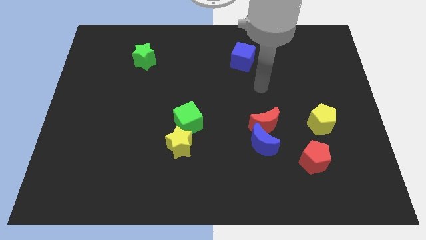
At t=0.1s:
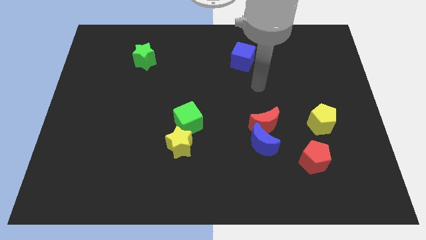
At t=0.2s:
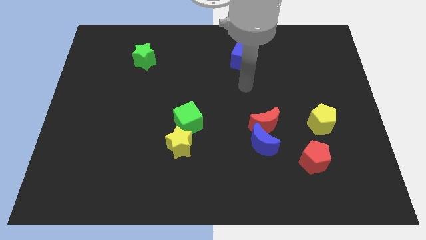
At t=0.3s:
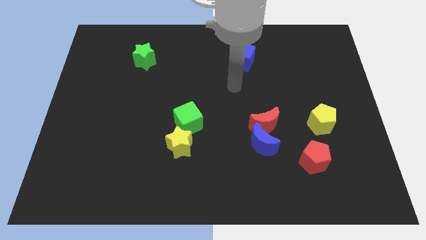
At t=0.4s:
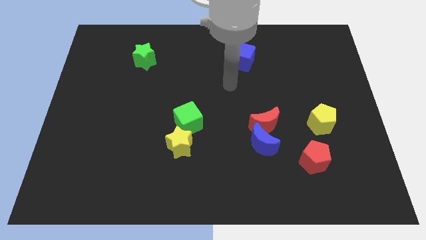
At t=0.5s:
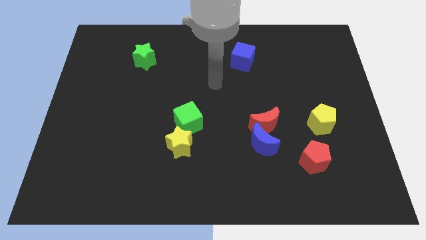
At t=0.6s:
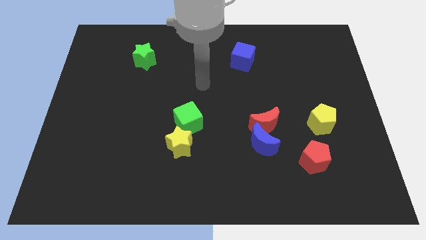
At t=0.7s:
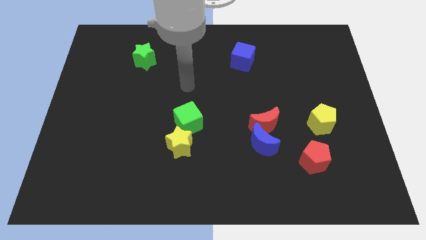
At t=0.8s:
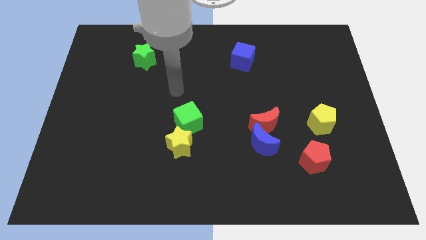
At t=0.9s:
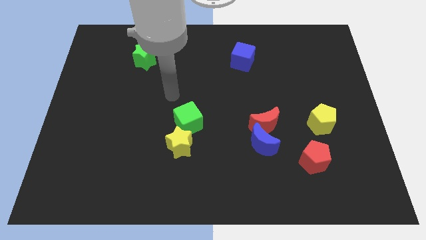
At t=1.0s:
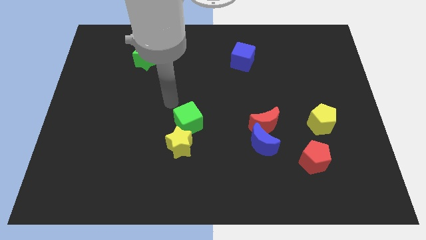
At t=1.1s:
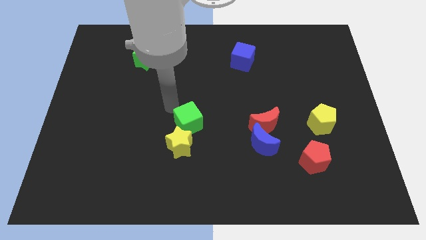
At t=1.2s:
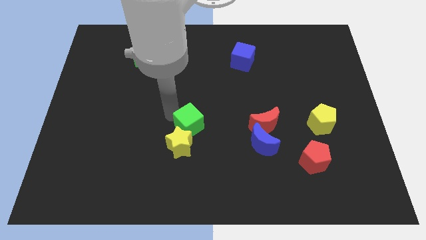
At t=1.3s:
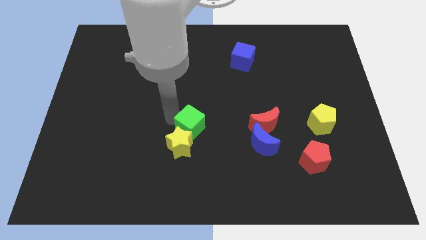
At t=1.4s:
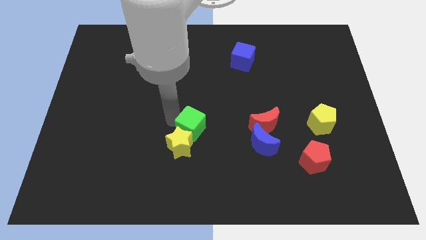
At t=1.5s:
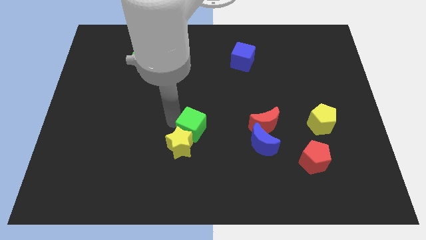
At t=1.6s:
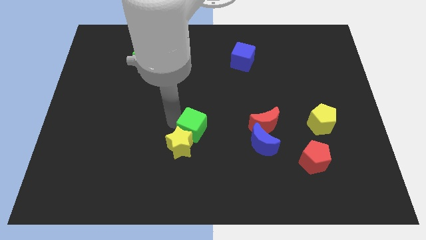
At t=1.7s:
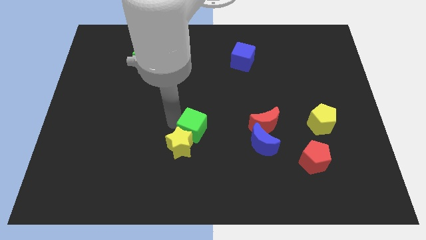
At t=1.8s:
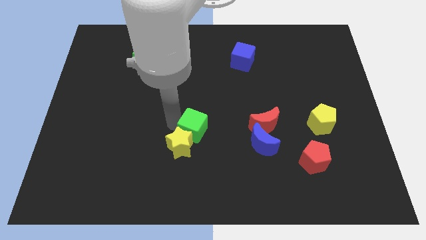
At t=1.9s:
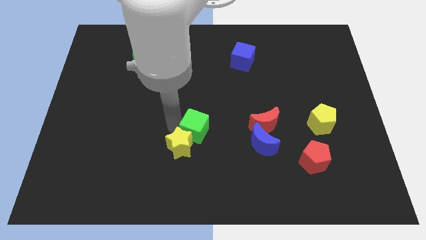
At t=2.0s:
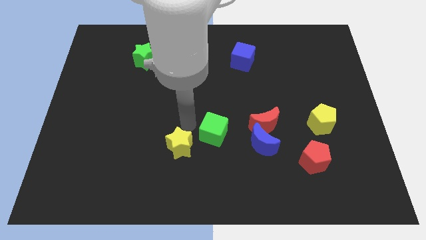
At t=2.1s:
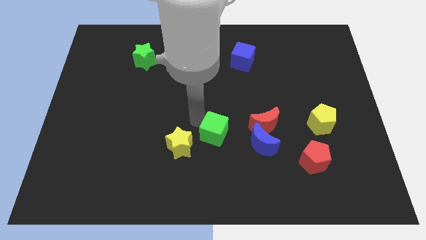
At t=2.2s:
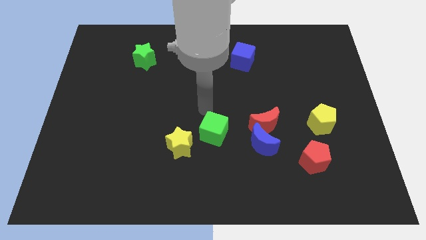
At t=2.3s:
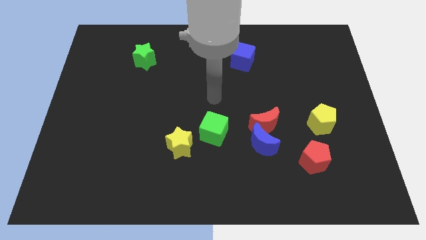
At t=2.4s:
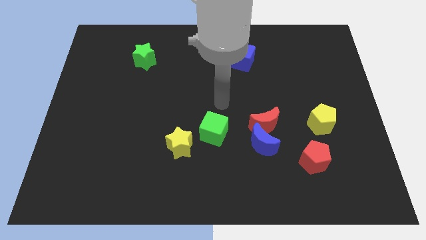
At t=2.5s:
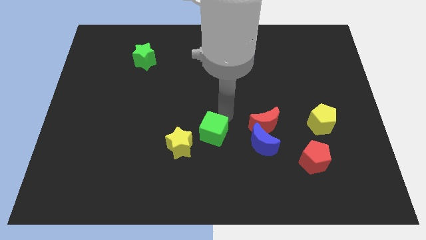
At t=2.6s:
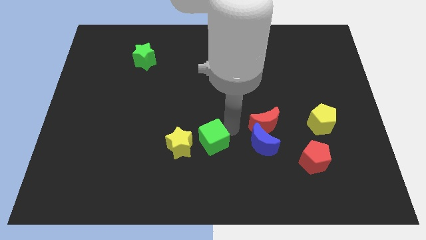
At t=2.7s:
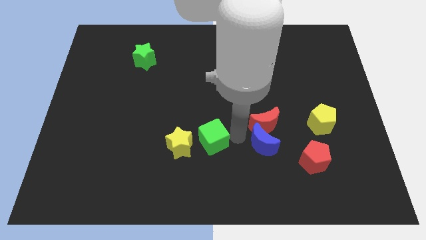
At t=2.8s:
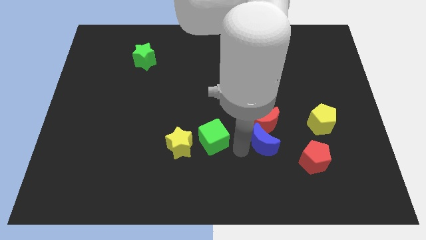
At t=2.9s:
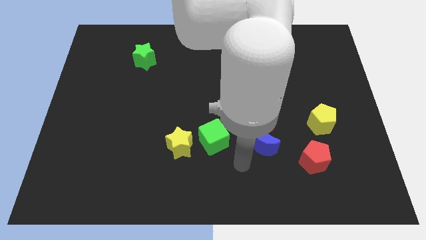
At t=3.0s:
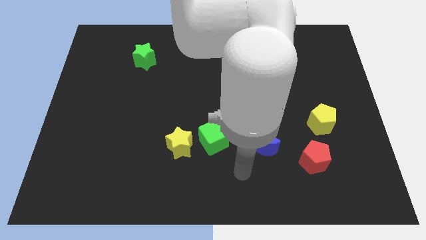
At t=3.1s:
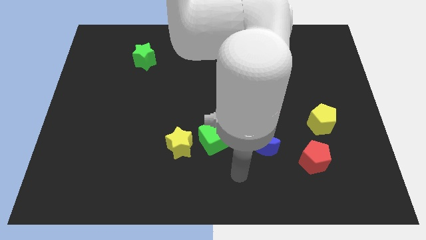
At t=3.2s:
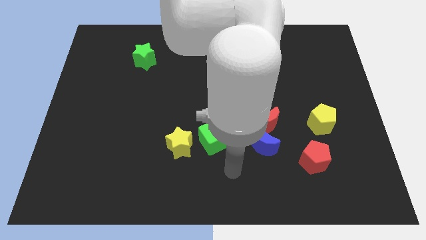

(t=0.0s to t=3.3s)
push the green cube to the right of the yellow star

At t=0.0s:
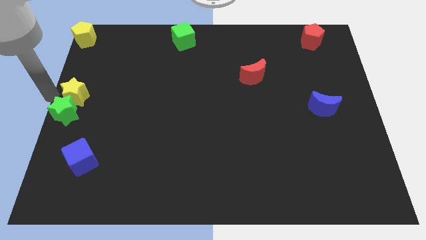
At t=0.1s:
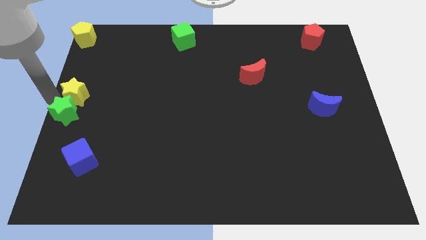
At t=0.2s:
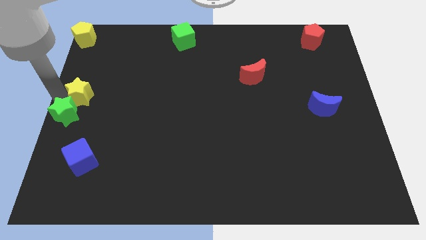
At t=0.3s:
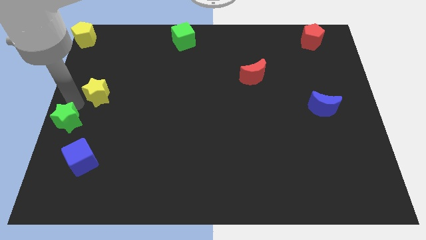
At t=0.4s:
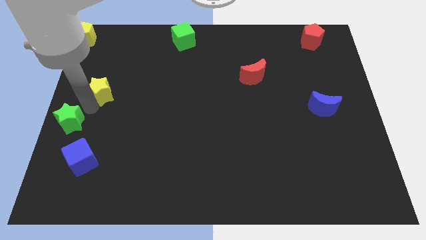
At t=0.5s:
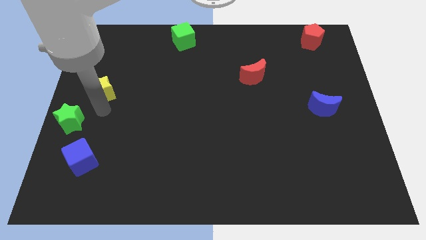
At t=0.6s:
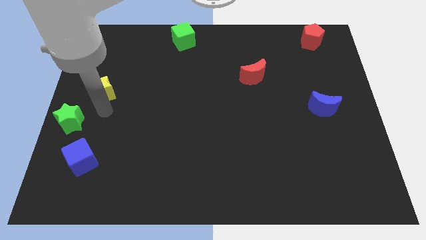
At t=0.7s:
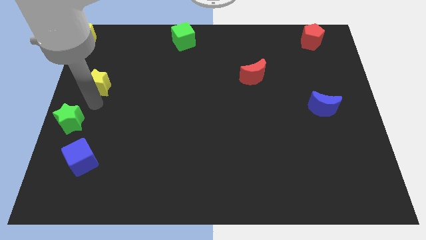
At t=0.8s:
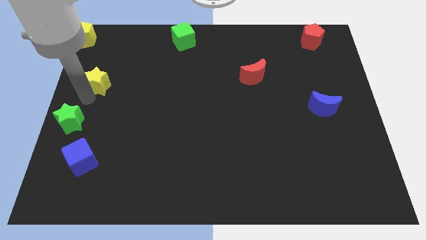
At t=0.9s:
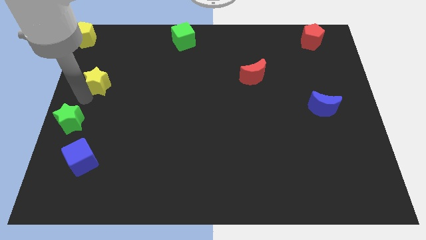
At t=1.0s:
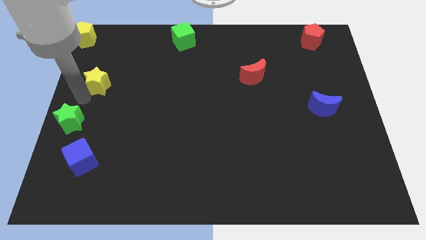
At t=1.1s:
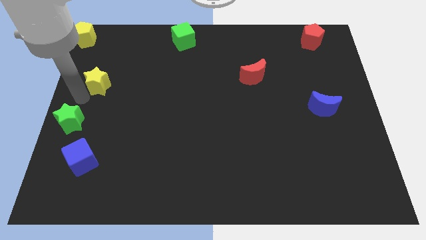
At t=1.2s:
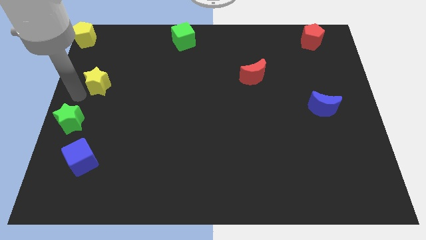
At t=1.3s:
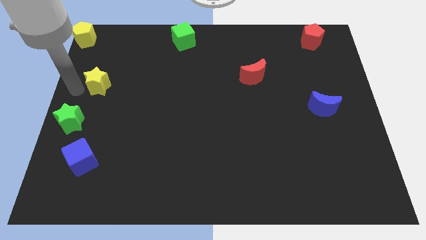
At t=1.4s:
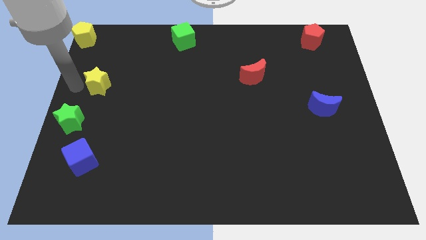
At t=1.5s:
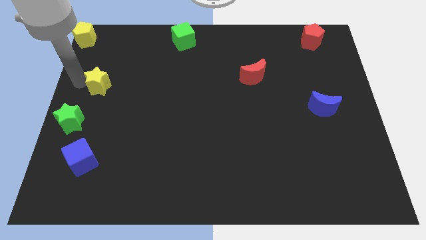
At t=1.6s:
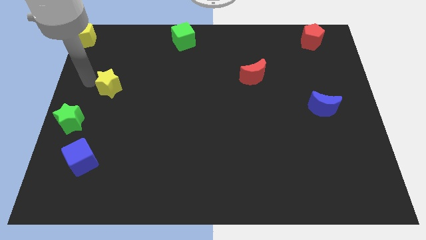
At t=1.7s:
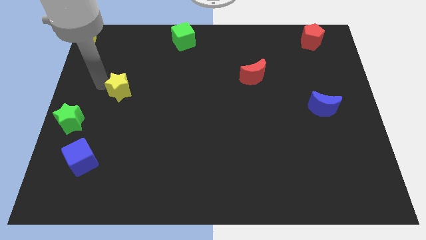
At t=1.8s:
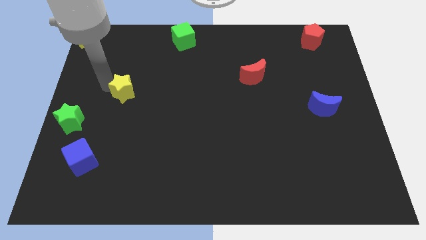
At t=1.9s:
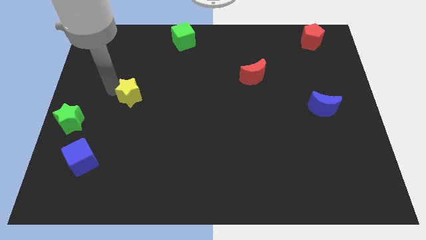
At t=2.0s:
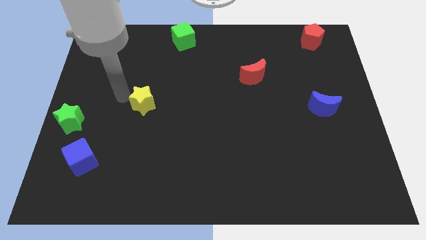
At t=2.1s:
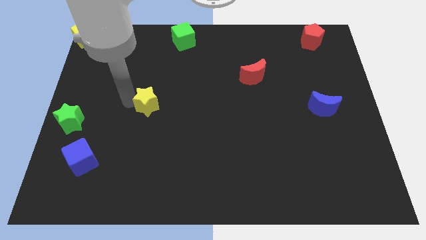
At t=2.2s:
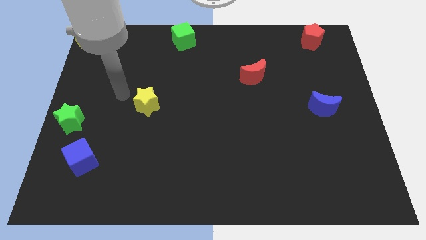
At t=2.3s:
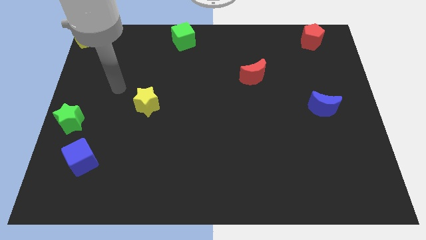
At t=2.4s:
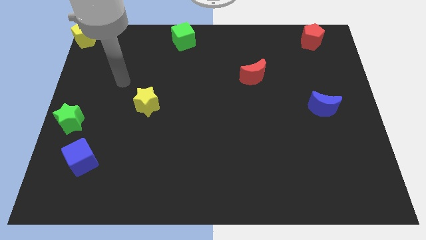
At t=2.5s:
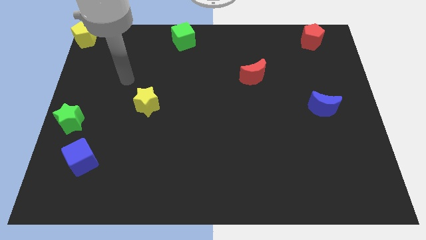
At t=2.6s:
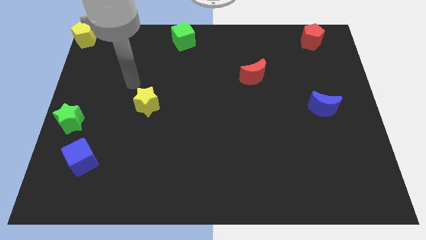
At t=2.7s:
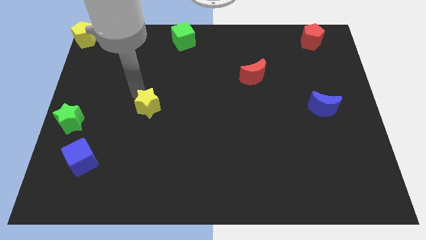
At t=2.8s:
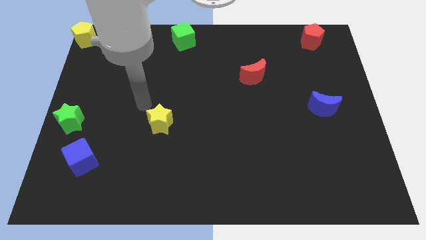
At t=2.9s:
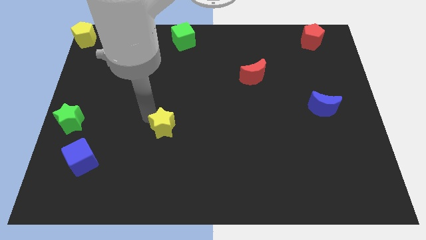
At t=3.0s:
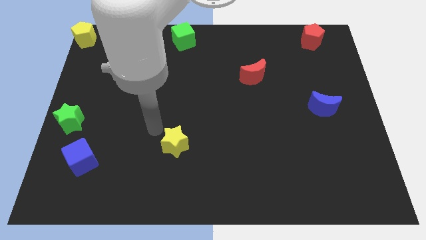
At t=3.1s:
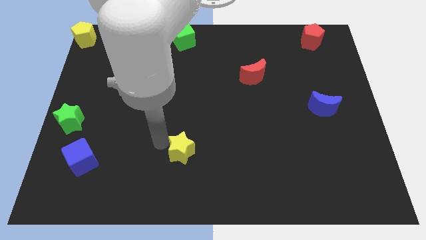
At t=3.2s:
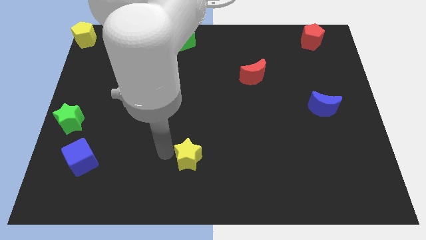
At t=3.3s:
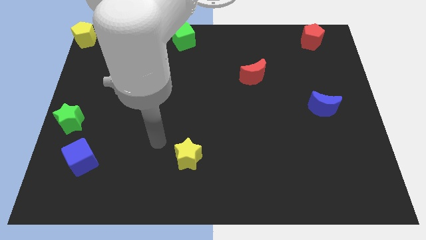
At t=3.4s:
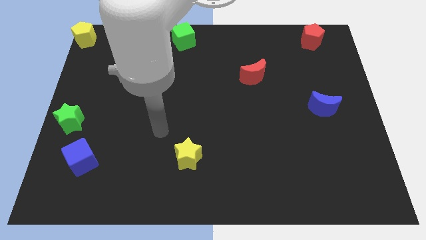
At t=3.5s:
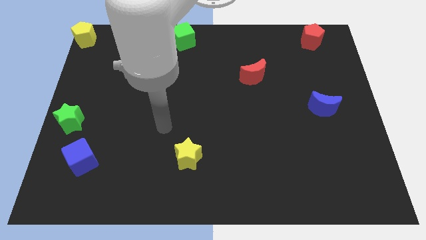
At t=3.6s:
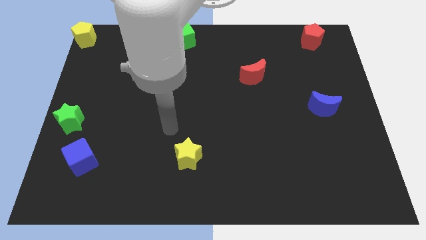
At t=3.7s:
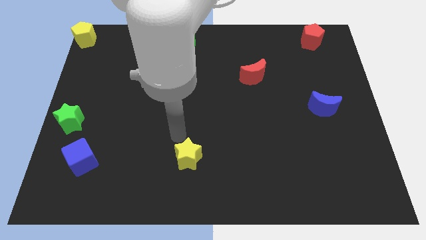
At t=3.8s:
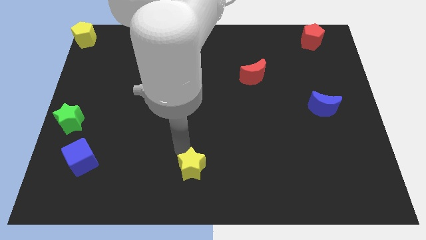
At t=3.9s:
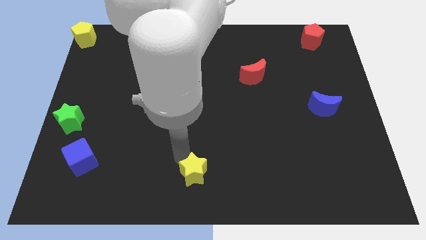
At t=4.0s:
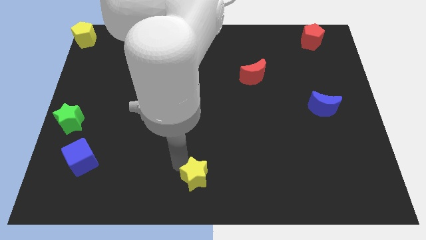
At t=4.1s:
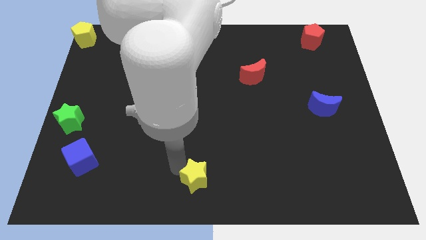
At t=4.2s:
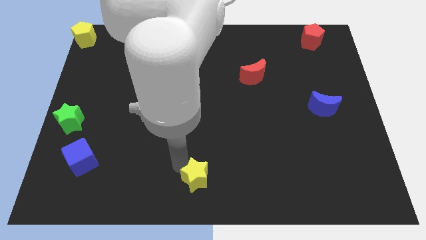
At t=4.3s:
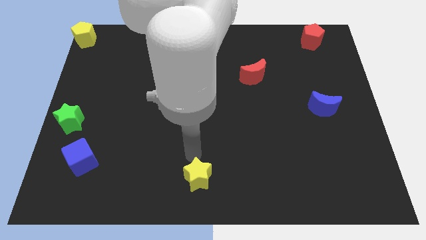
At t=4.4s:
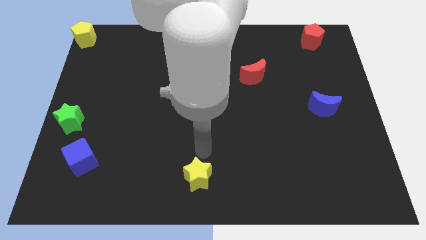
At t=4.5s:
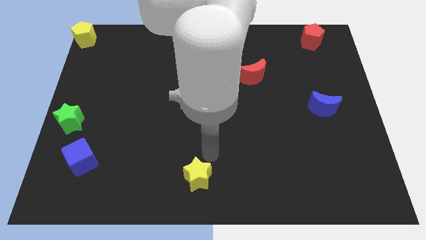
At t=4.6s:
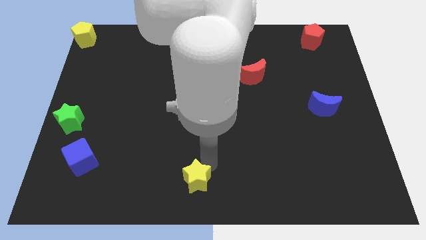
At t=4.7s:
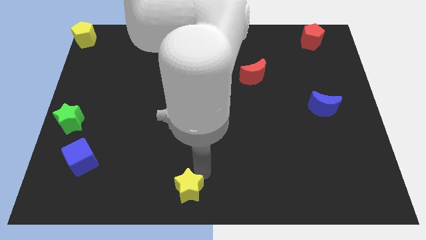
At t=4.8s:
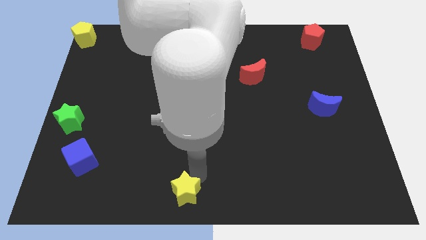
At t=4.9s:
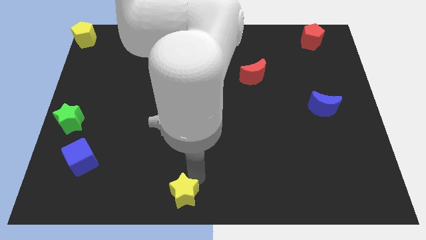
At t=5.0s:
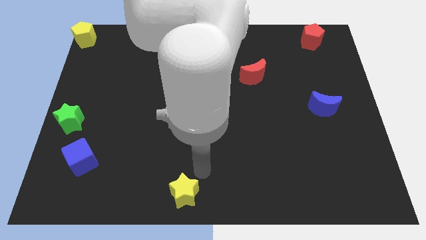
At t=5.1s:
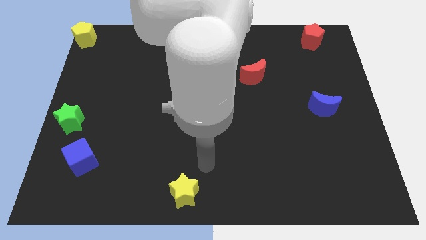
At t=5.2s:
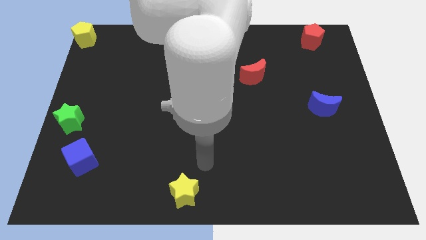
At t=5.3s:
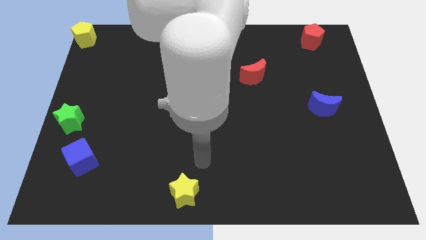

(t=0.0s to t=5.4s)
push the yellow star towards the bottom center of the board

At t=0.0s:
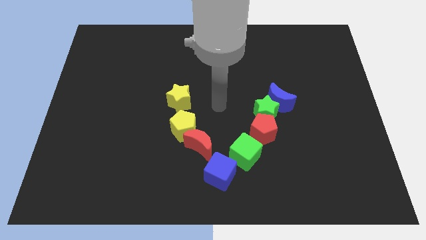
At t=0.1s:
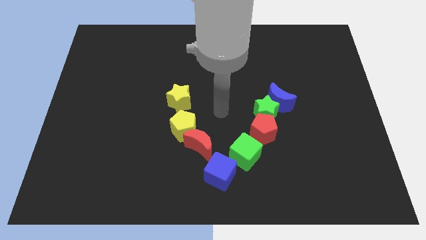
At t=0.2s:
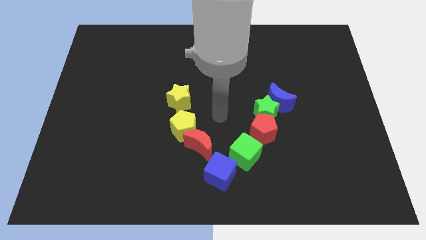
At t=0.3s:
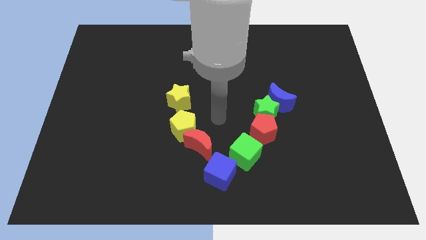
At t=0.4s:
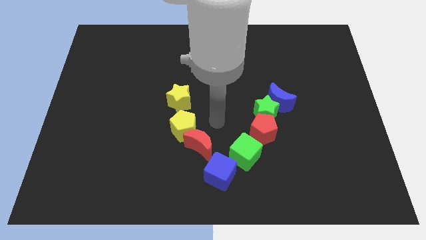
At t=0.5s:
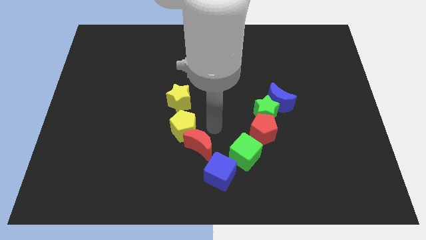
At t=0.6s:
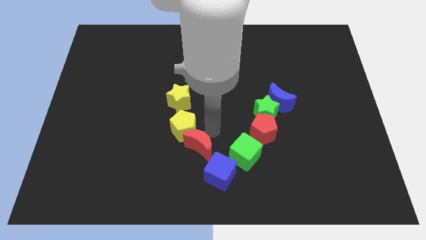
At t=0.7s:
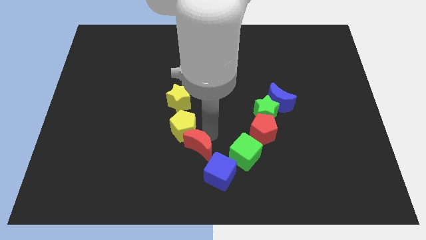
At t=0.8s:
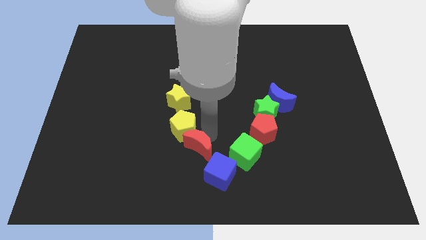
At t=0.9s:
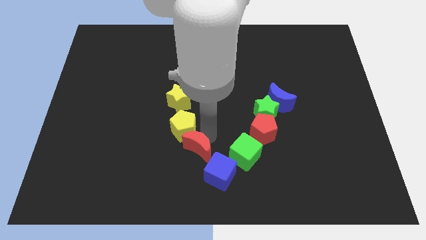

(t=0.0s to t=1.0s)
place the arm near the red moon
